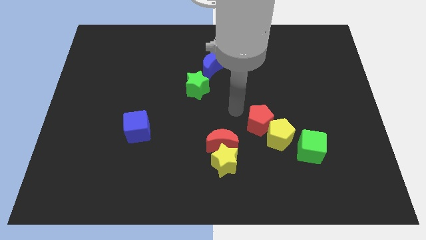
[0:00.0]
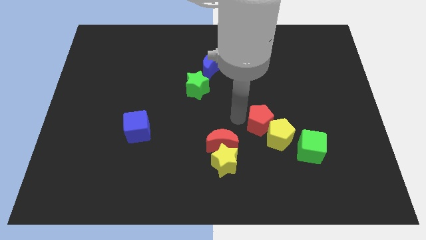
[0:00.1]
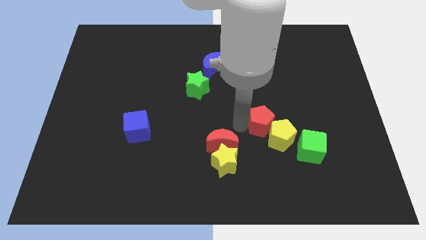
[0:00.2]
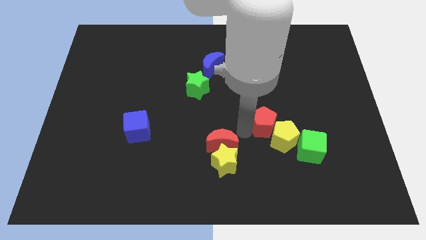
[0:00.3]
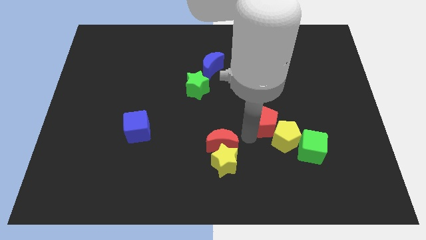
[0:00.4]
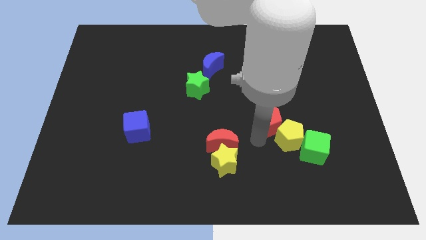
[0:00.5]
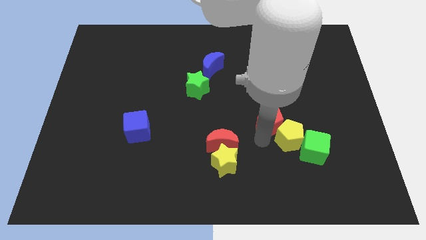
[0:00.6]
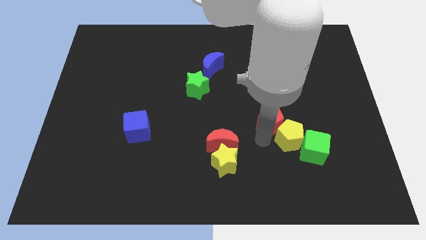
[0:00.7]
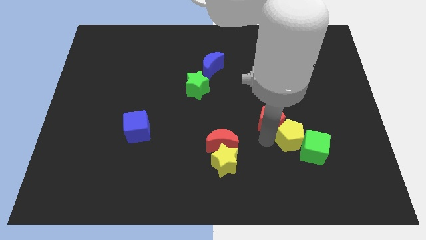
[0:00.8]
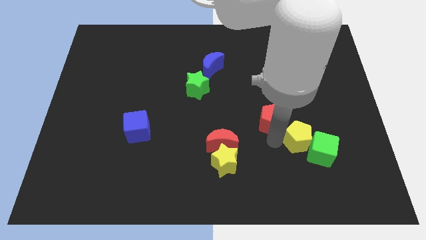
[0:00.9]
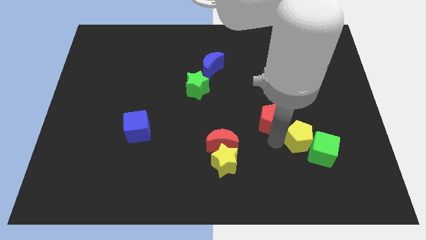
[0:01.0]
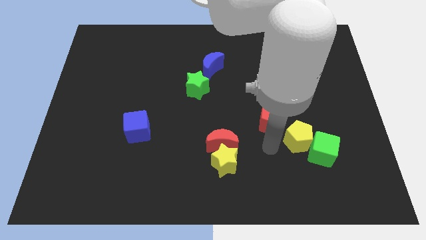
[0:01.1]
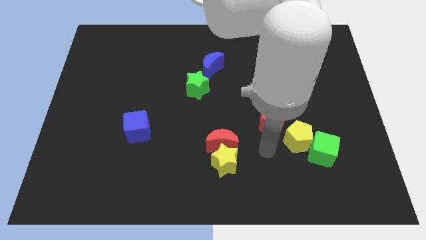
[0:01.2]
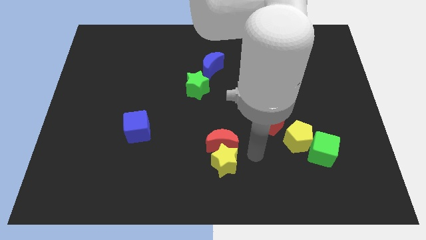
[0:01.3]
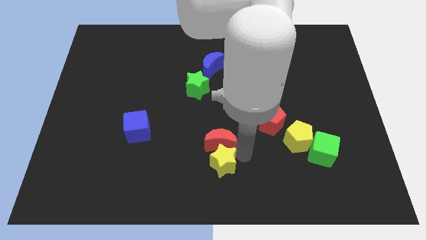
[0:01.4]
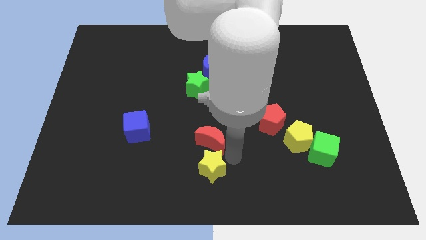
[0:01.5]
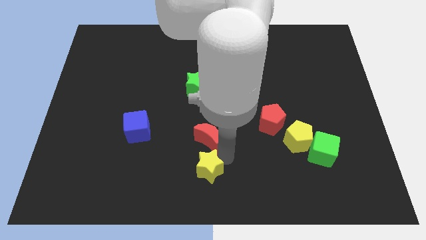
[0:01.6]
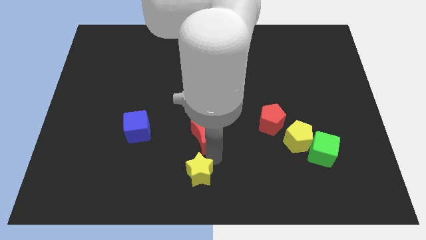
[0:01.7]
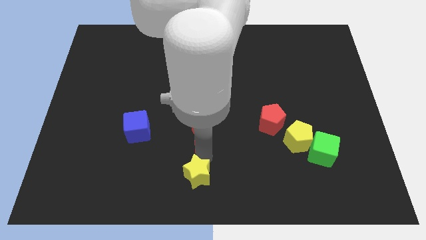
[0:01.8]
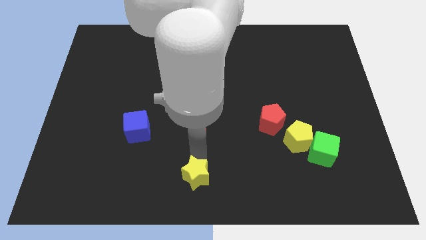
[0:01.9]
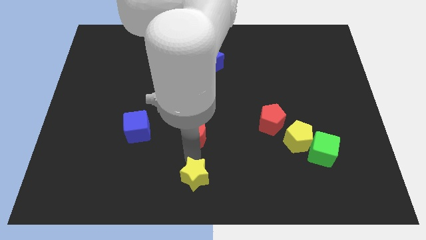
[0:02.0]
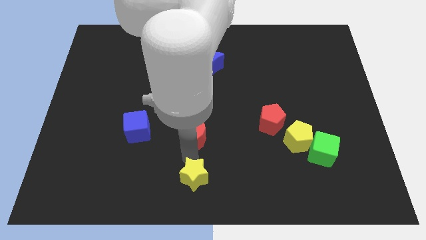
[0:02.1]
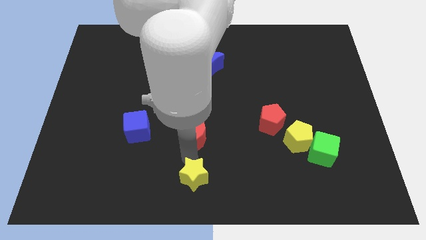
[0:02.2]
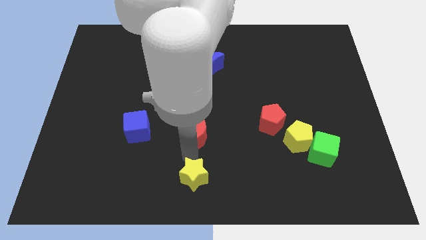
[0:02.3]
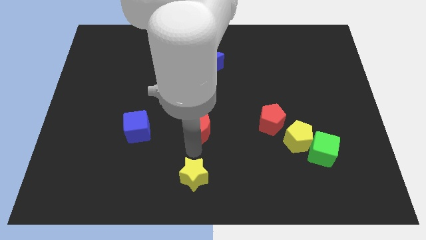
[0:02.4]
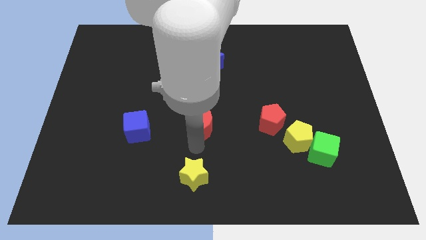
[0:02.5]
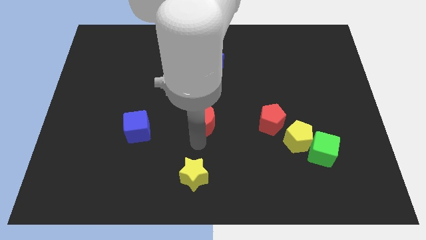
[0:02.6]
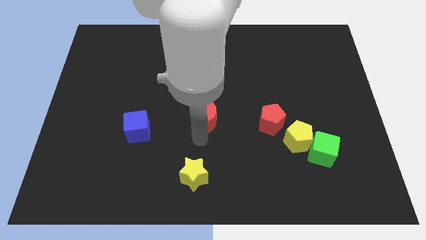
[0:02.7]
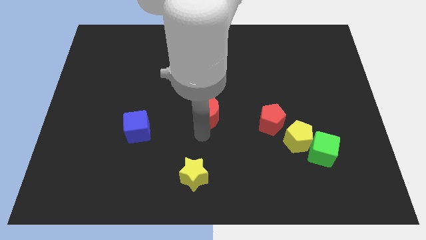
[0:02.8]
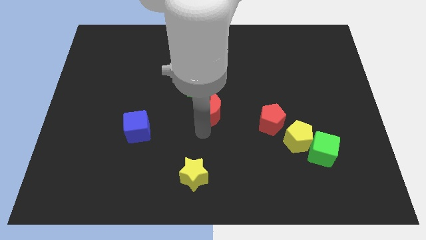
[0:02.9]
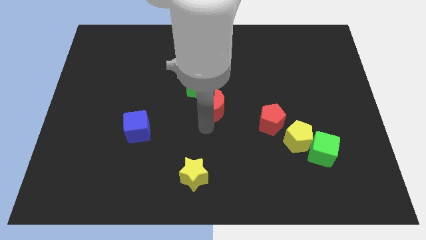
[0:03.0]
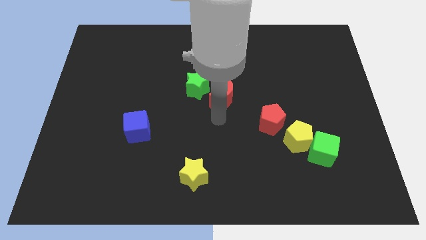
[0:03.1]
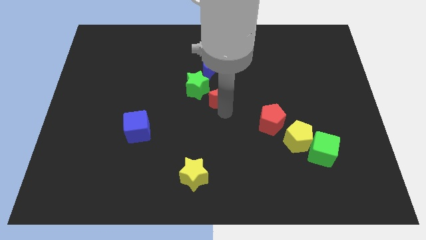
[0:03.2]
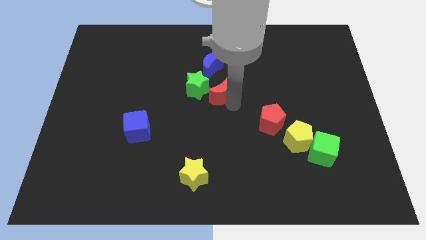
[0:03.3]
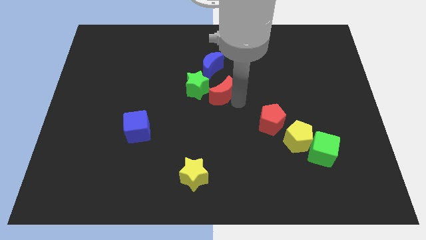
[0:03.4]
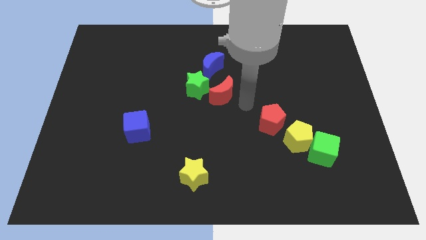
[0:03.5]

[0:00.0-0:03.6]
take the red moon close to the green star

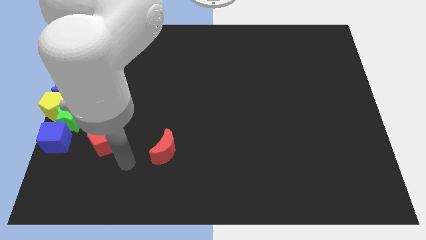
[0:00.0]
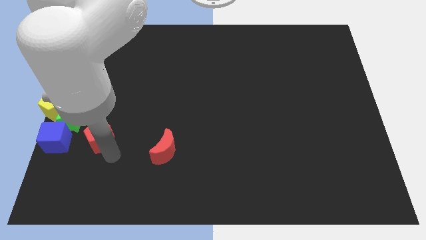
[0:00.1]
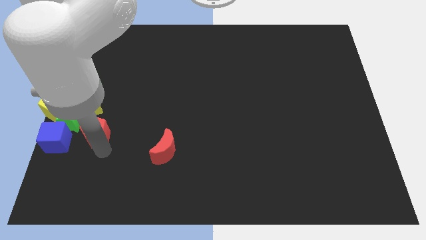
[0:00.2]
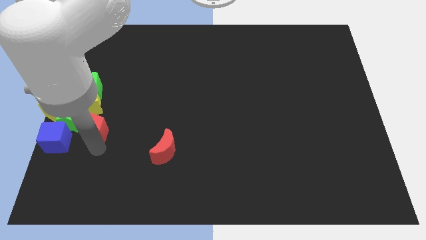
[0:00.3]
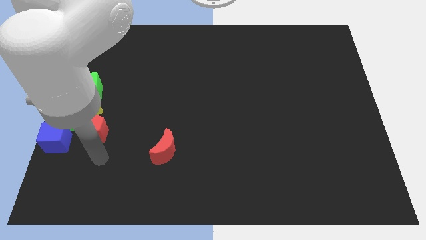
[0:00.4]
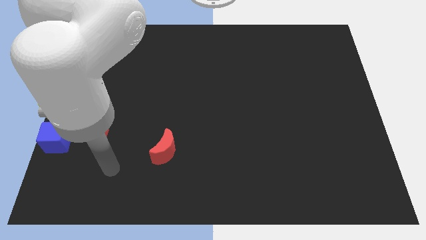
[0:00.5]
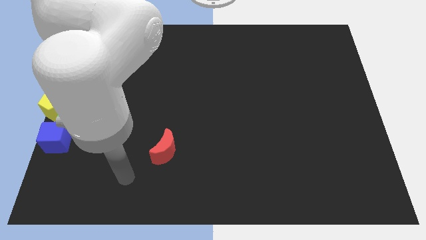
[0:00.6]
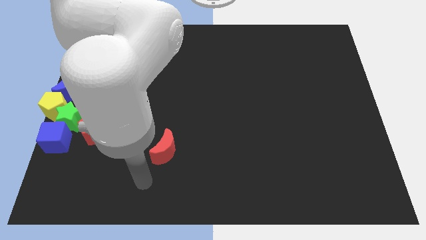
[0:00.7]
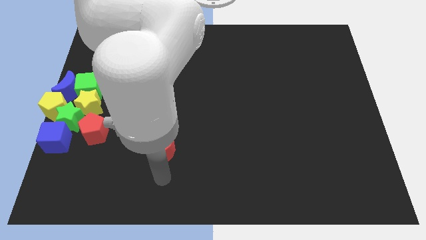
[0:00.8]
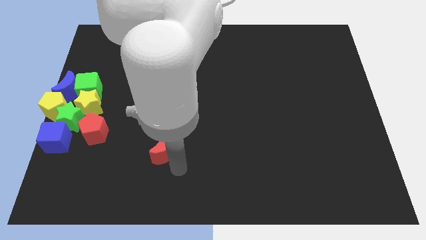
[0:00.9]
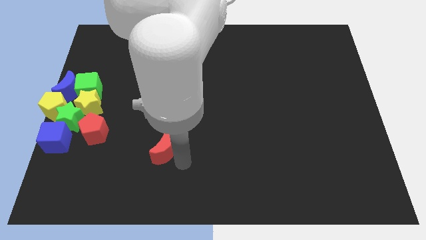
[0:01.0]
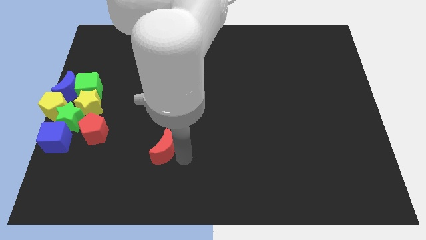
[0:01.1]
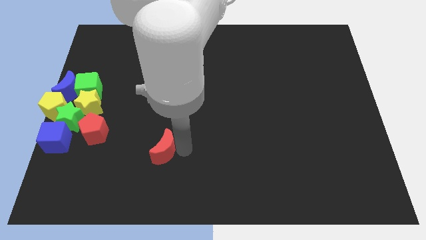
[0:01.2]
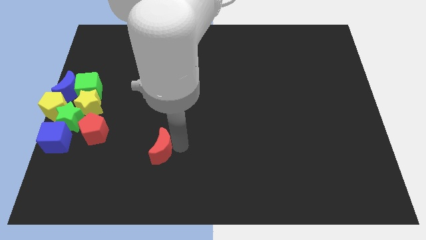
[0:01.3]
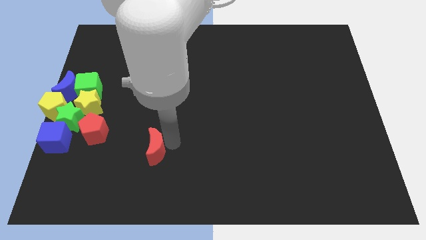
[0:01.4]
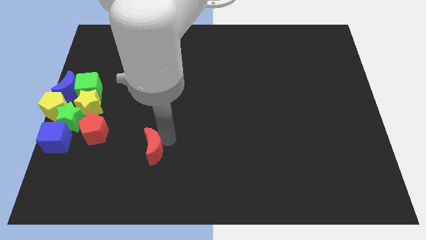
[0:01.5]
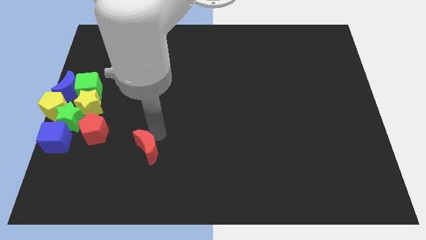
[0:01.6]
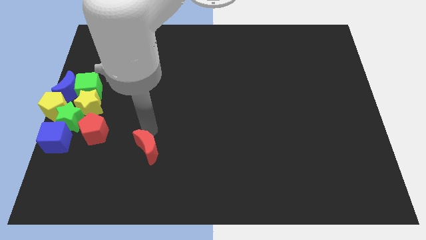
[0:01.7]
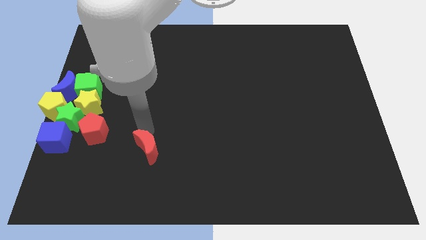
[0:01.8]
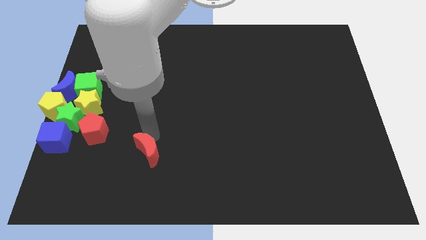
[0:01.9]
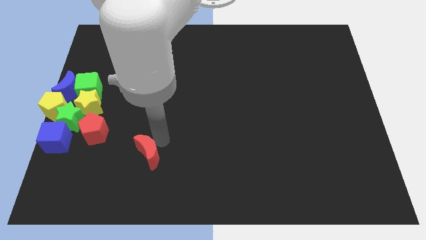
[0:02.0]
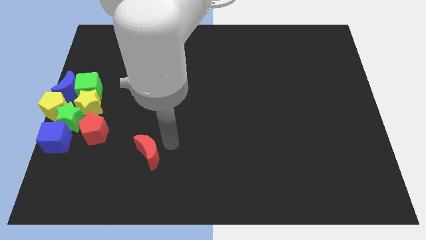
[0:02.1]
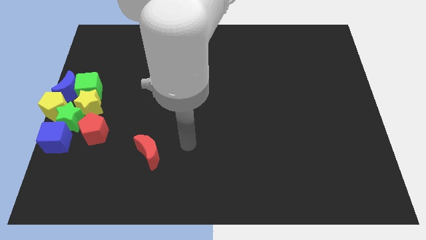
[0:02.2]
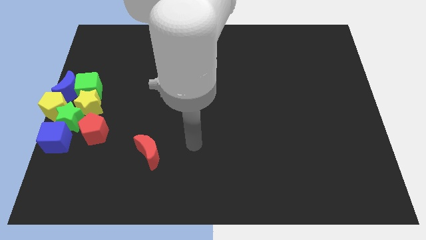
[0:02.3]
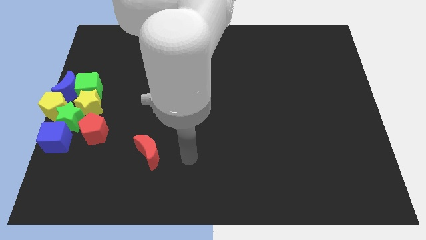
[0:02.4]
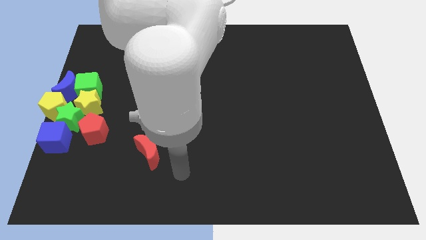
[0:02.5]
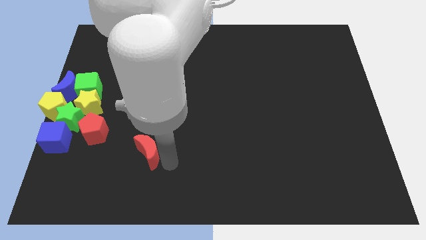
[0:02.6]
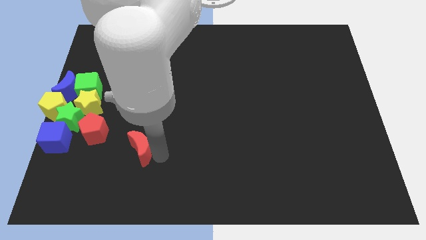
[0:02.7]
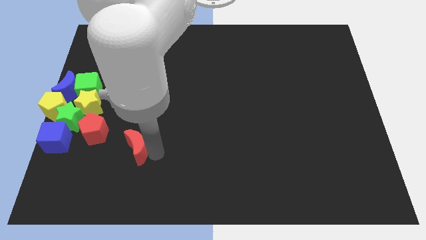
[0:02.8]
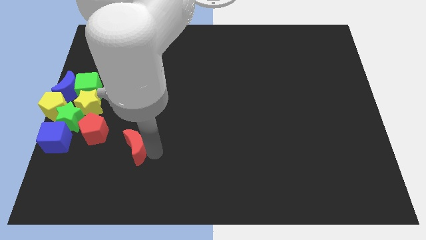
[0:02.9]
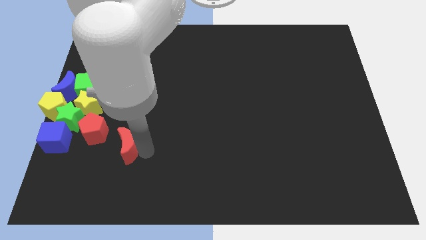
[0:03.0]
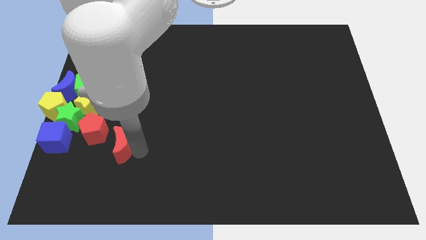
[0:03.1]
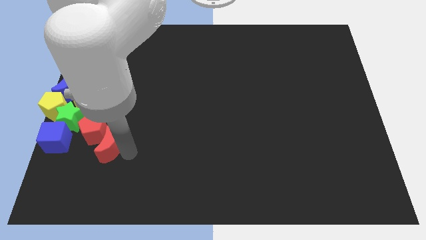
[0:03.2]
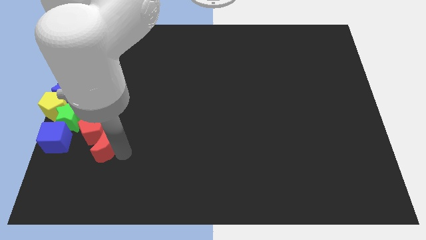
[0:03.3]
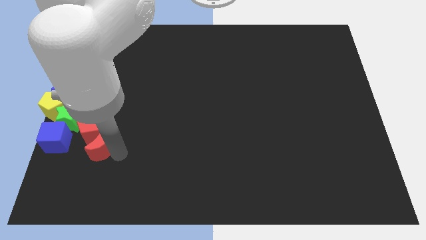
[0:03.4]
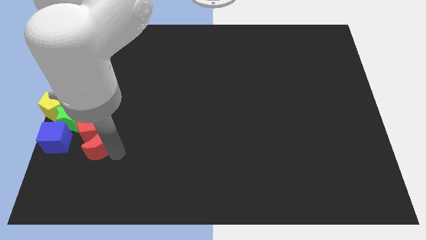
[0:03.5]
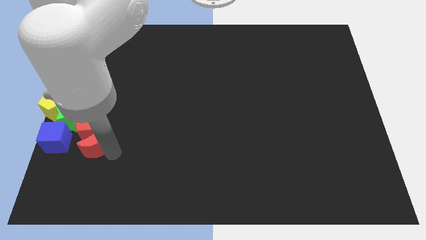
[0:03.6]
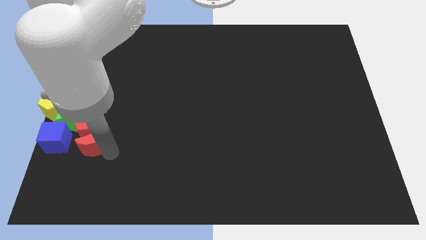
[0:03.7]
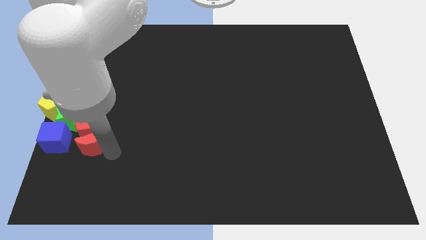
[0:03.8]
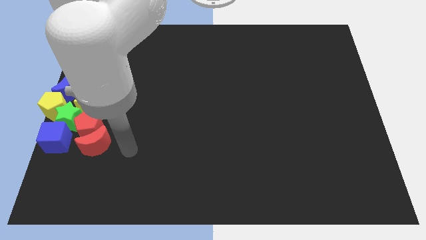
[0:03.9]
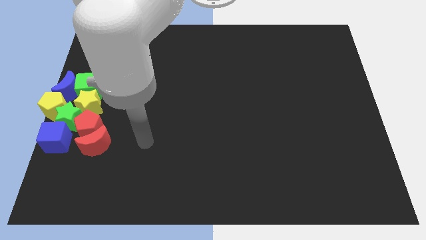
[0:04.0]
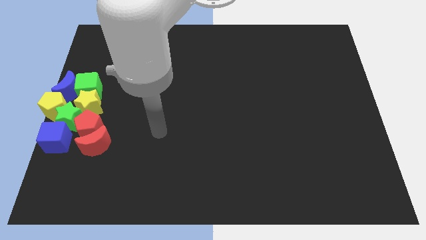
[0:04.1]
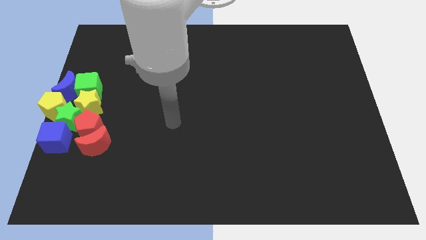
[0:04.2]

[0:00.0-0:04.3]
move the red moon to the bottom of red pentagon

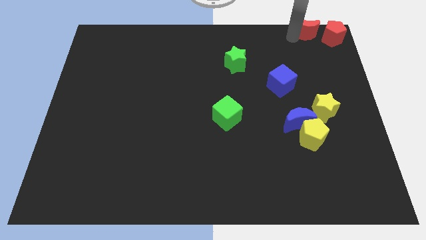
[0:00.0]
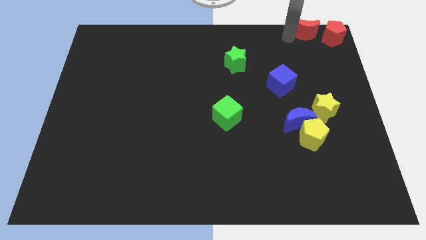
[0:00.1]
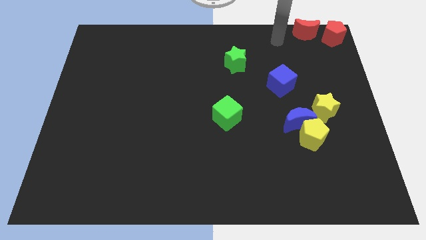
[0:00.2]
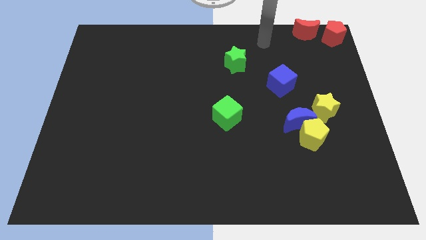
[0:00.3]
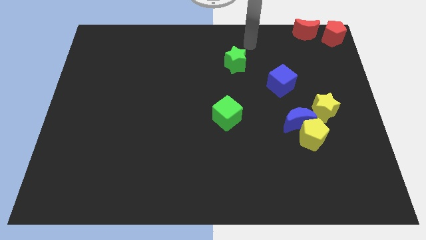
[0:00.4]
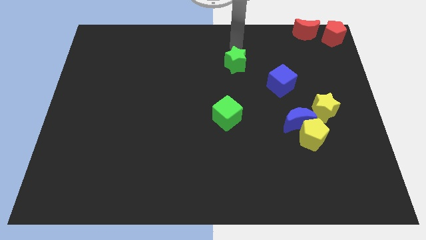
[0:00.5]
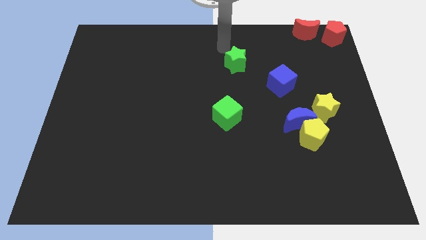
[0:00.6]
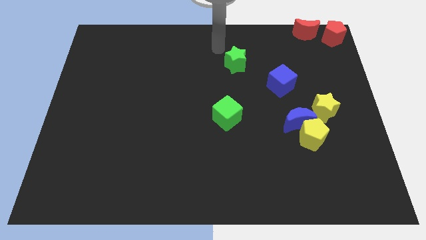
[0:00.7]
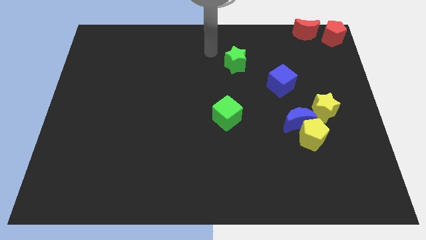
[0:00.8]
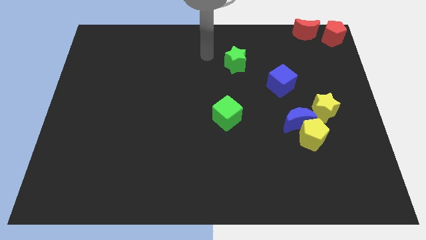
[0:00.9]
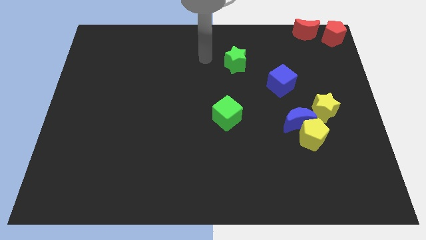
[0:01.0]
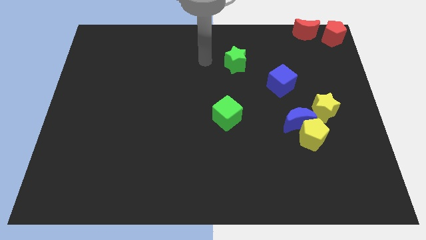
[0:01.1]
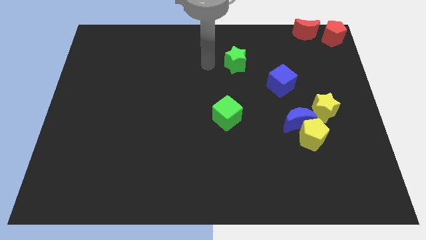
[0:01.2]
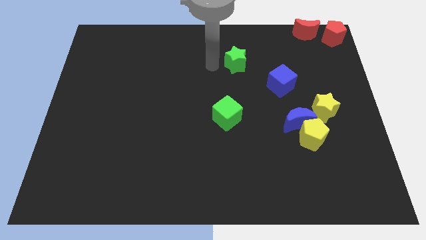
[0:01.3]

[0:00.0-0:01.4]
move the arm towards the left of the green star
